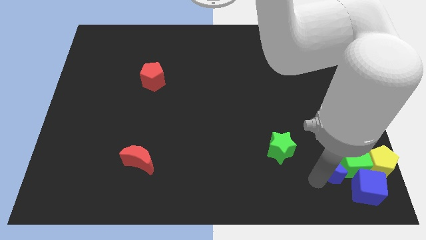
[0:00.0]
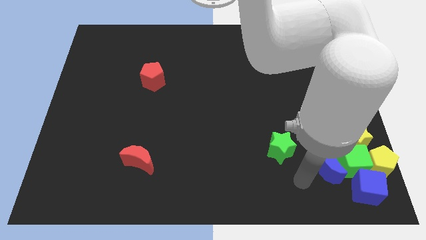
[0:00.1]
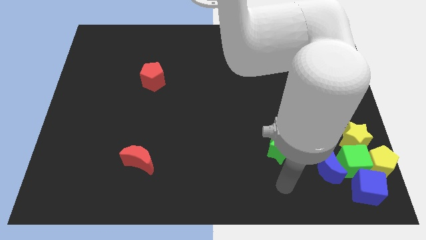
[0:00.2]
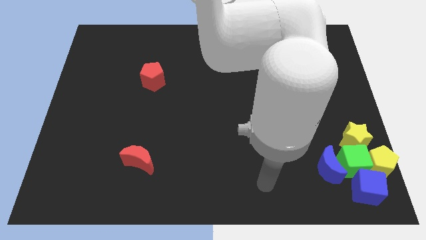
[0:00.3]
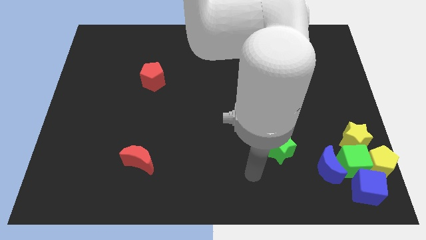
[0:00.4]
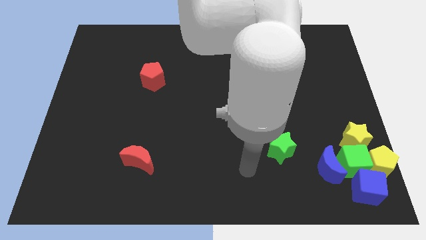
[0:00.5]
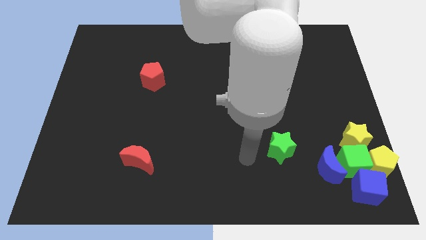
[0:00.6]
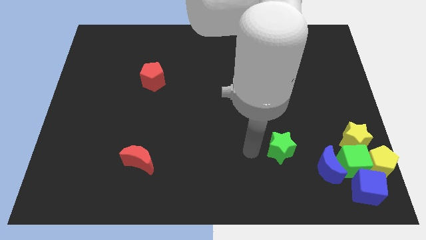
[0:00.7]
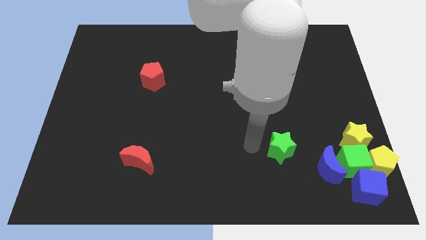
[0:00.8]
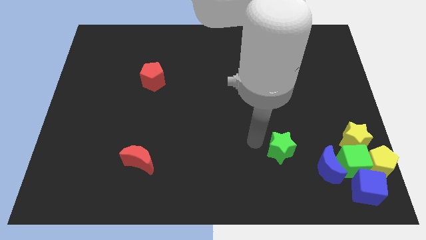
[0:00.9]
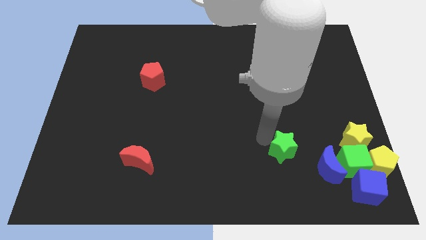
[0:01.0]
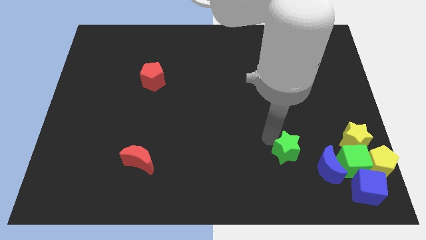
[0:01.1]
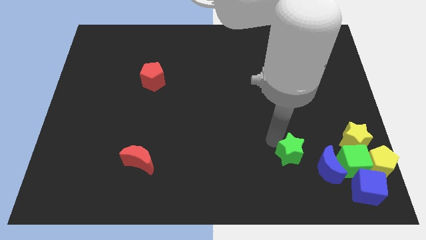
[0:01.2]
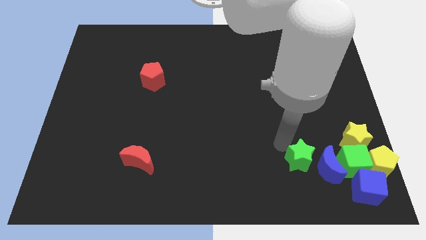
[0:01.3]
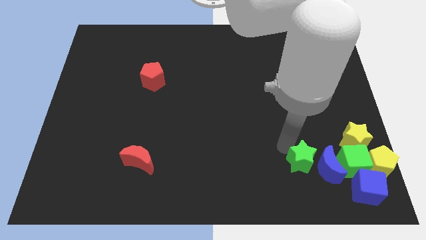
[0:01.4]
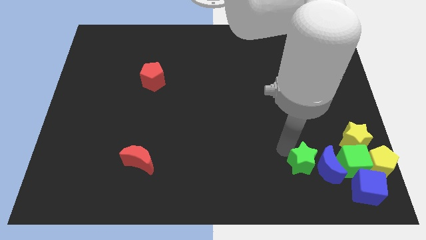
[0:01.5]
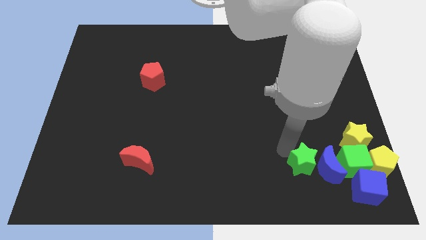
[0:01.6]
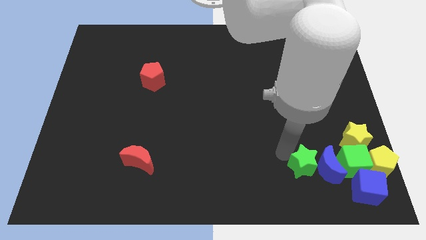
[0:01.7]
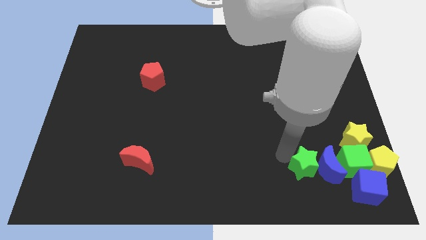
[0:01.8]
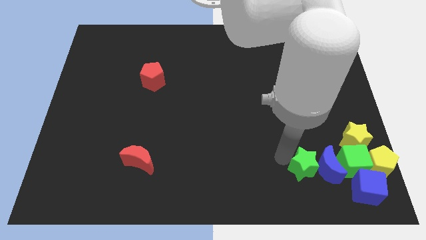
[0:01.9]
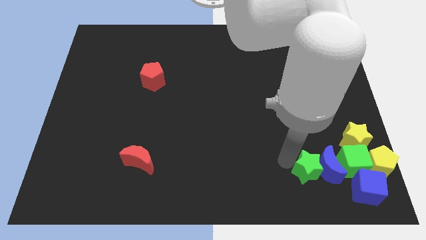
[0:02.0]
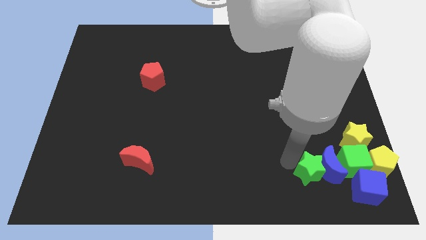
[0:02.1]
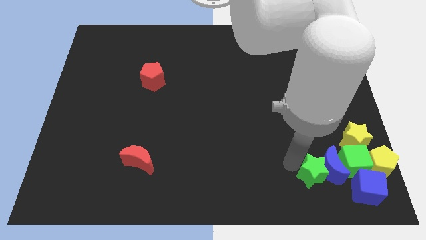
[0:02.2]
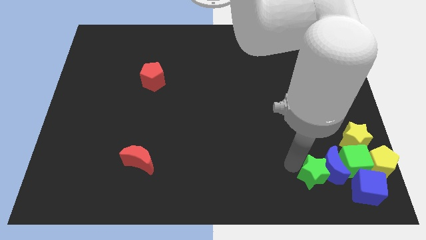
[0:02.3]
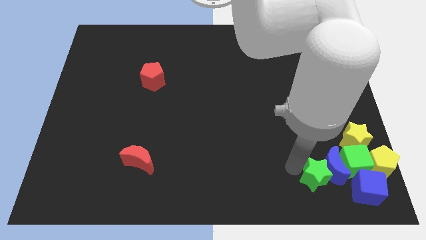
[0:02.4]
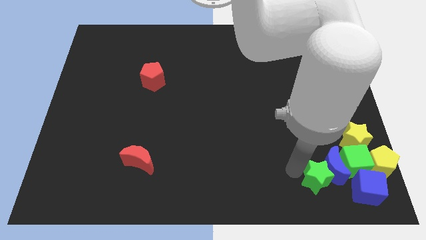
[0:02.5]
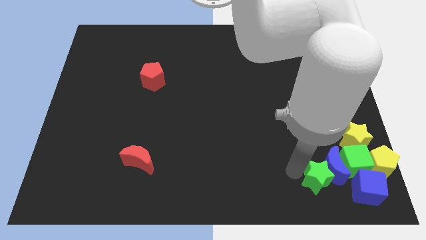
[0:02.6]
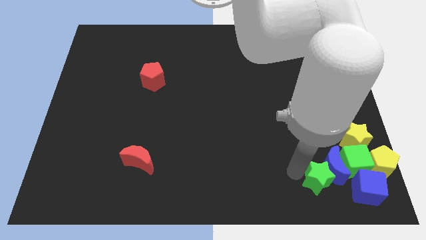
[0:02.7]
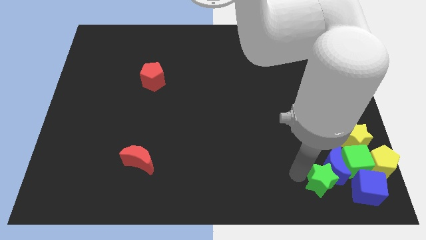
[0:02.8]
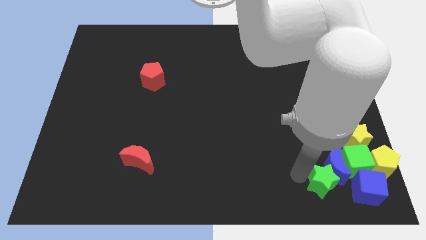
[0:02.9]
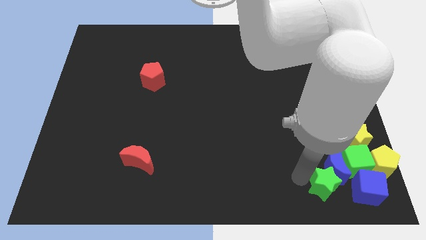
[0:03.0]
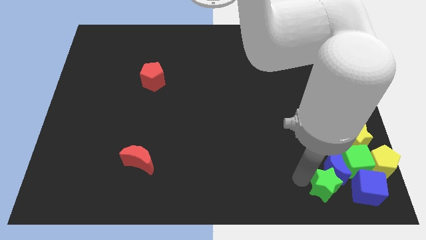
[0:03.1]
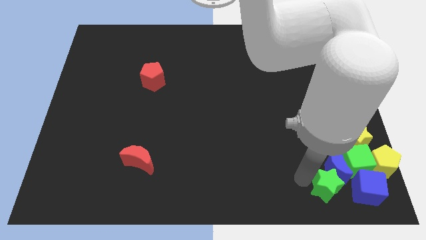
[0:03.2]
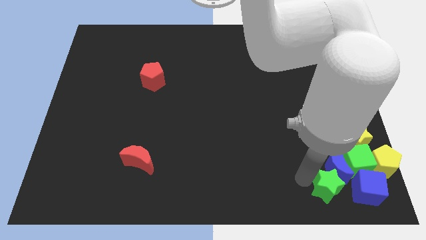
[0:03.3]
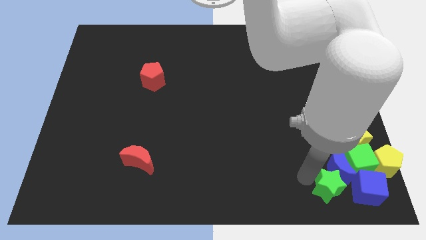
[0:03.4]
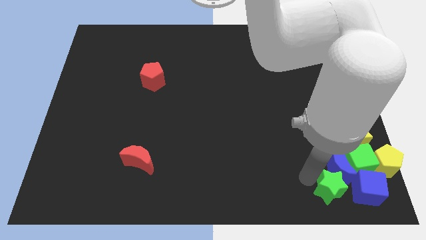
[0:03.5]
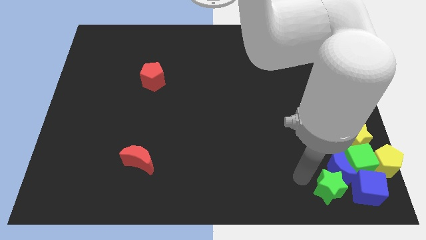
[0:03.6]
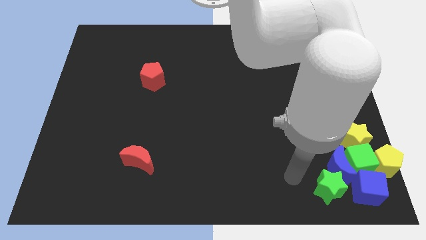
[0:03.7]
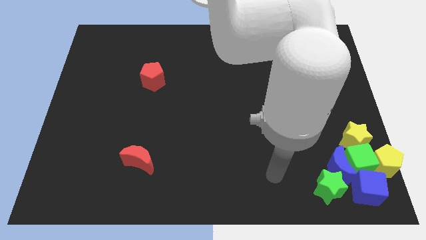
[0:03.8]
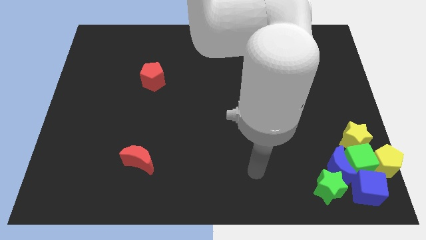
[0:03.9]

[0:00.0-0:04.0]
push the green star into the blue moon

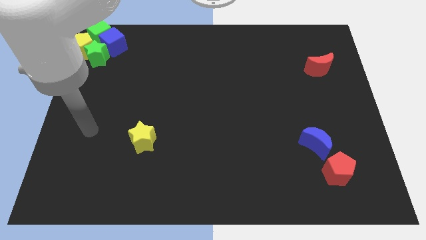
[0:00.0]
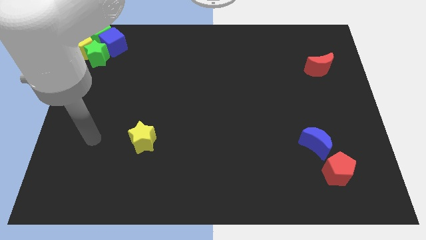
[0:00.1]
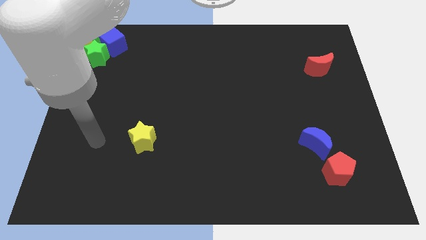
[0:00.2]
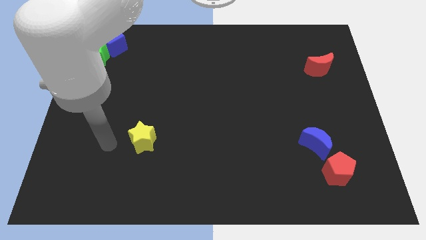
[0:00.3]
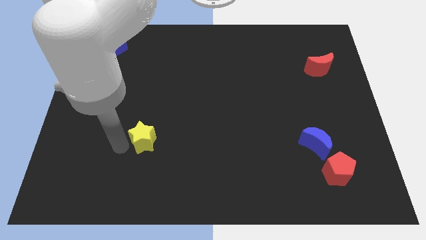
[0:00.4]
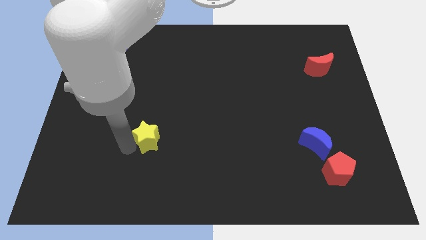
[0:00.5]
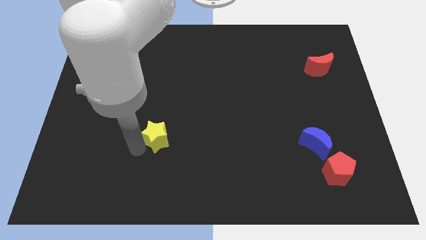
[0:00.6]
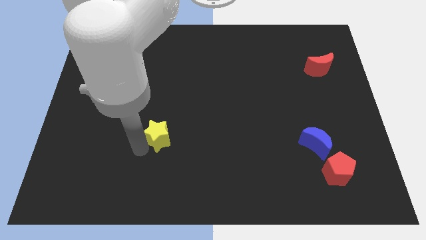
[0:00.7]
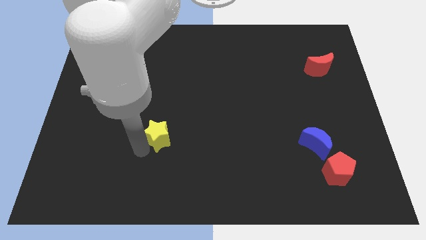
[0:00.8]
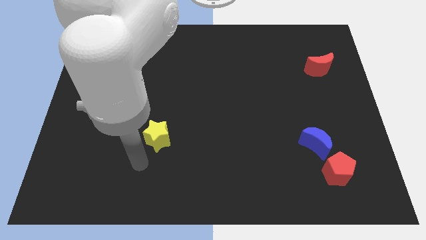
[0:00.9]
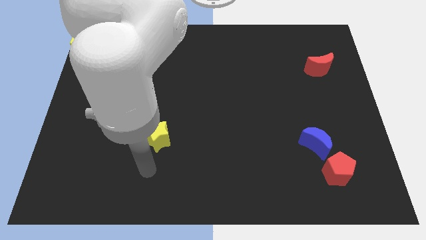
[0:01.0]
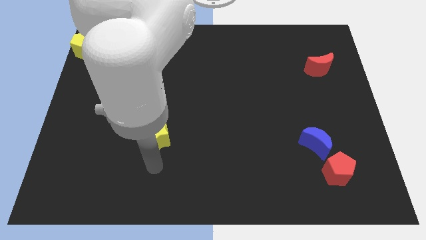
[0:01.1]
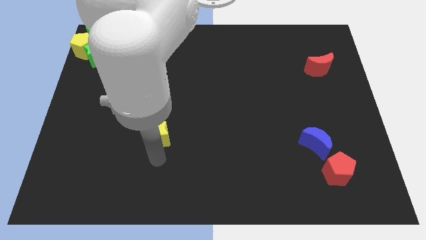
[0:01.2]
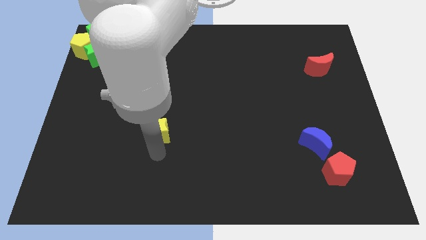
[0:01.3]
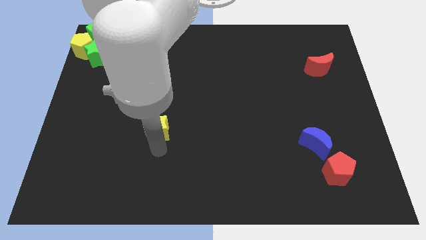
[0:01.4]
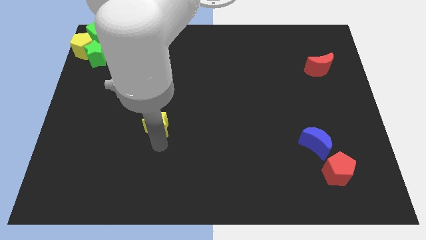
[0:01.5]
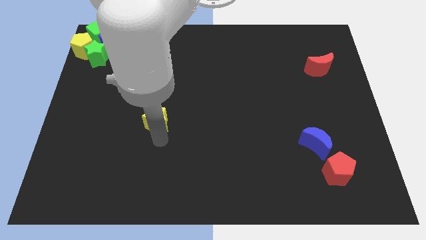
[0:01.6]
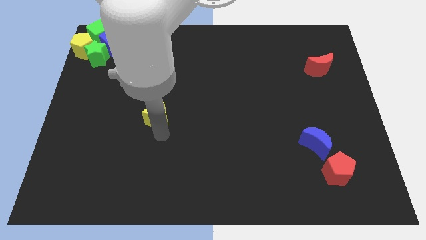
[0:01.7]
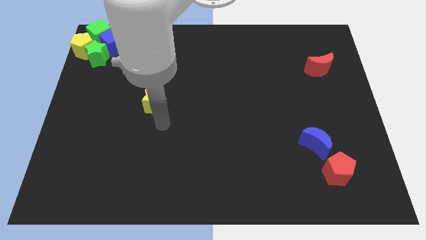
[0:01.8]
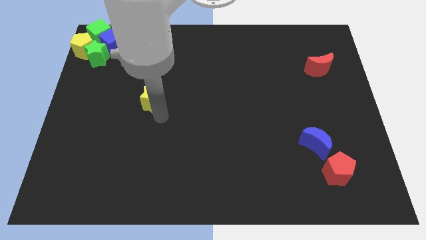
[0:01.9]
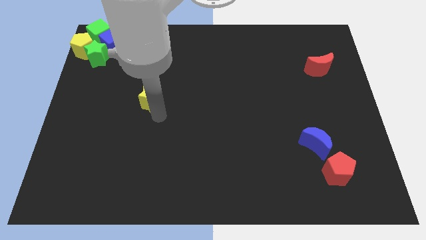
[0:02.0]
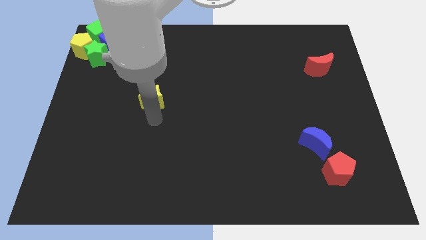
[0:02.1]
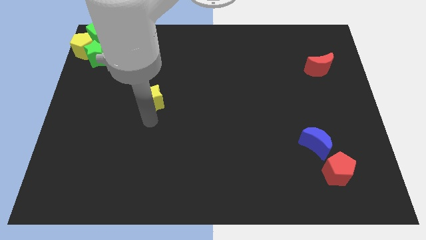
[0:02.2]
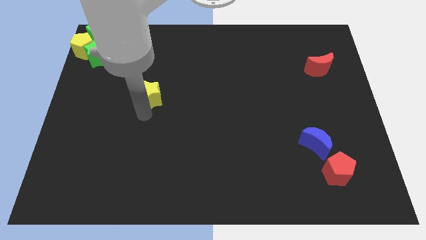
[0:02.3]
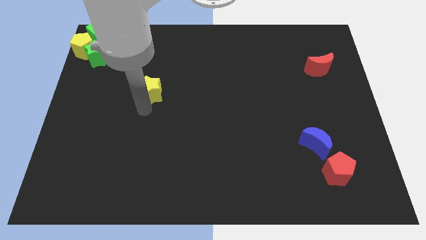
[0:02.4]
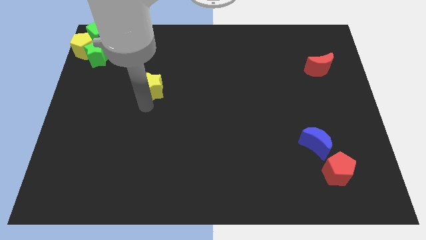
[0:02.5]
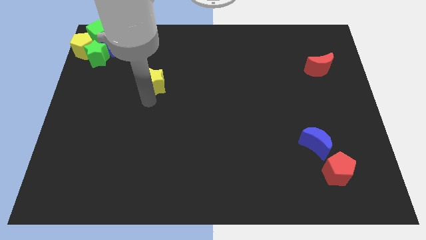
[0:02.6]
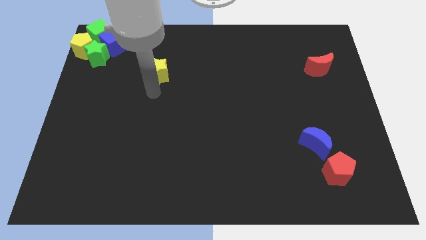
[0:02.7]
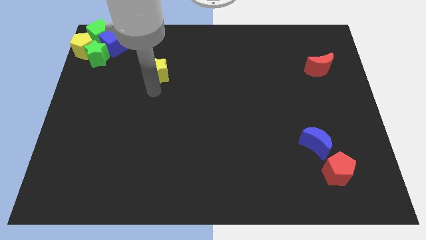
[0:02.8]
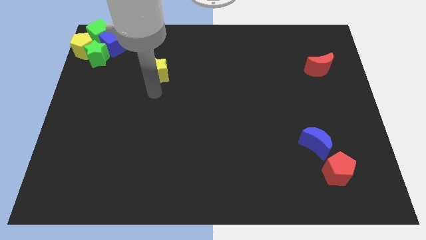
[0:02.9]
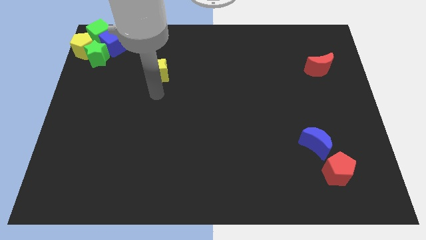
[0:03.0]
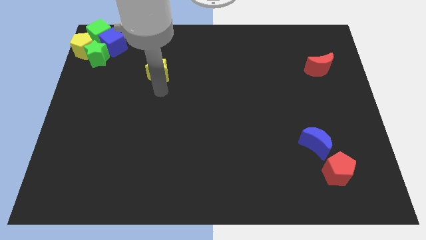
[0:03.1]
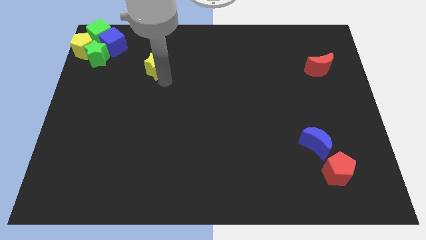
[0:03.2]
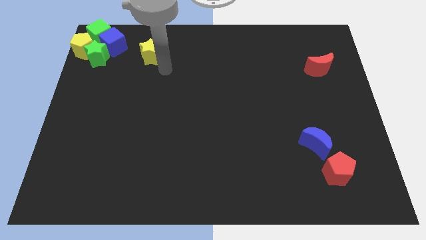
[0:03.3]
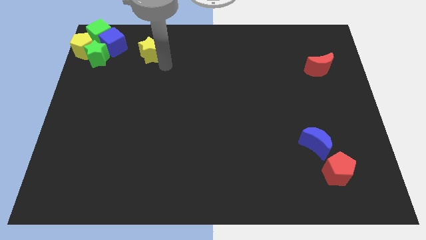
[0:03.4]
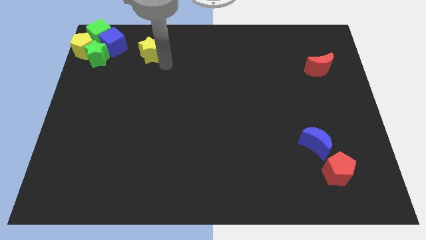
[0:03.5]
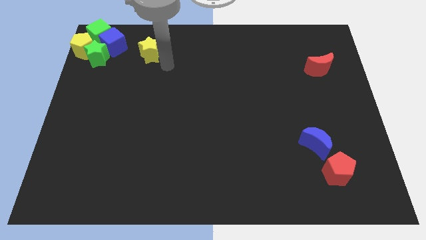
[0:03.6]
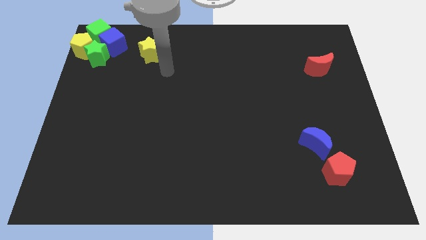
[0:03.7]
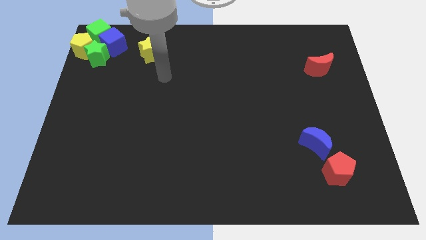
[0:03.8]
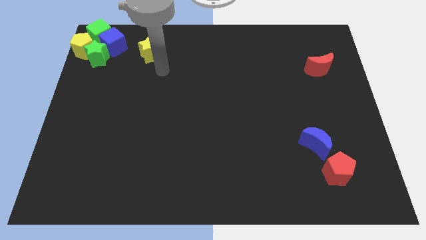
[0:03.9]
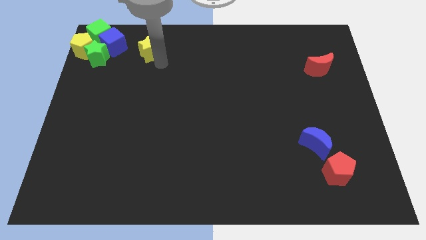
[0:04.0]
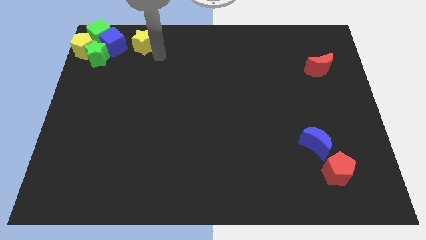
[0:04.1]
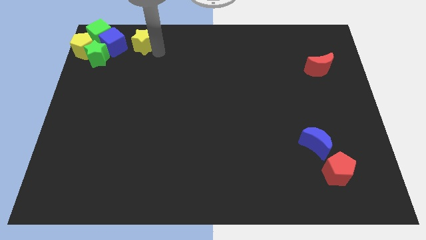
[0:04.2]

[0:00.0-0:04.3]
push the yellow star to the top right side of the blue cube

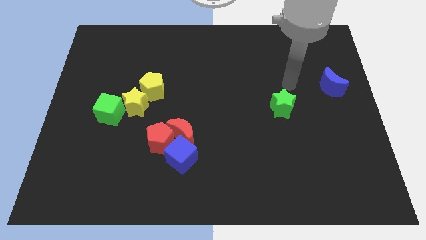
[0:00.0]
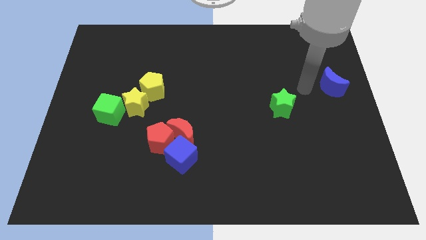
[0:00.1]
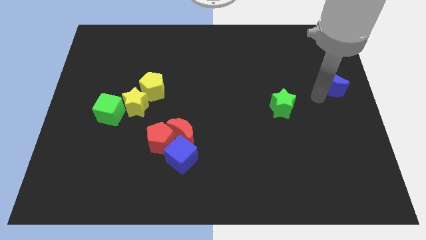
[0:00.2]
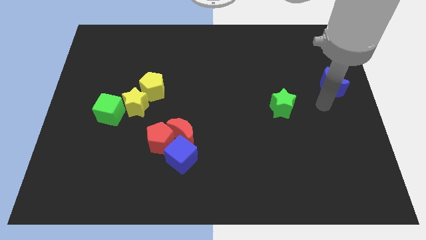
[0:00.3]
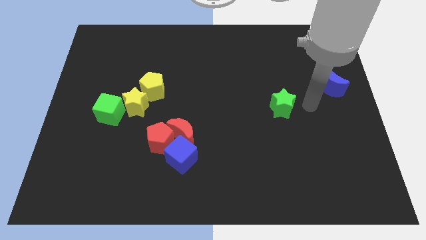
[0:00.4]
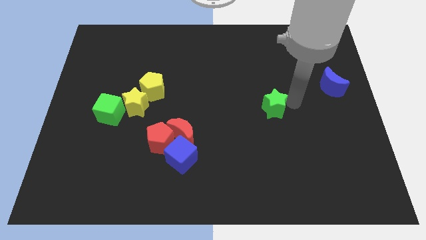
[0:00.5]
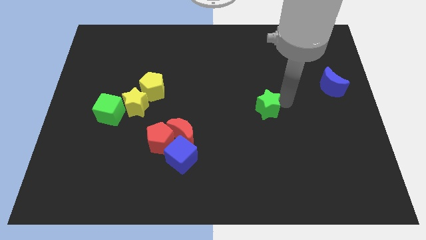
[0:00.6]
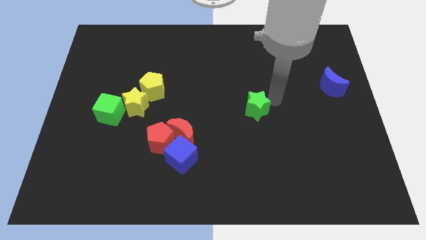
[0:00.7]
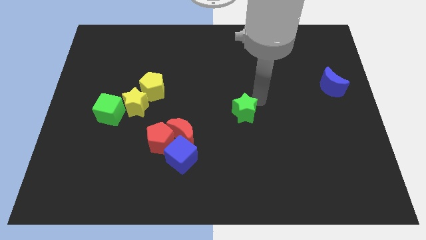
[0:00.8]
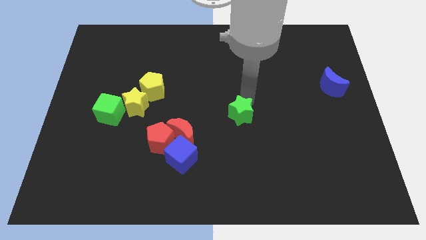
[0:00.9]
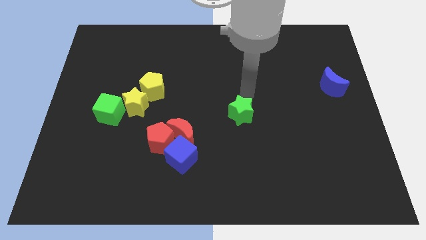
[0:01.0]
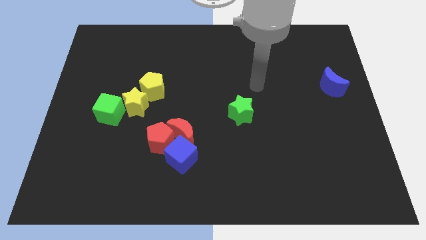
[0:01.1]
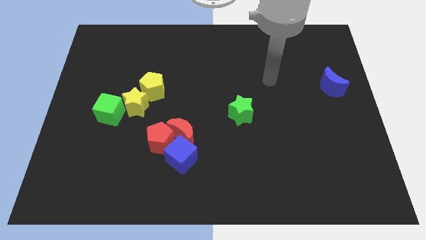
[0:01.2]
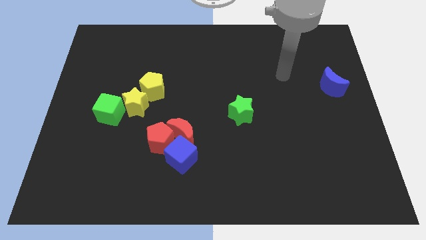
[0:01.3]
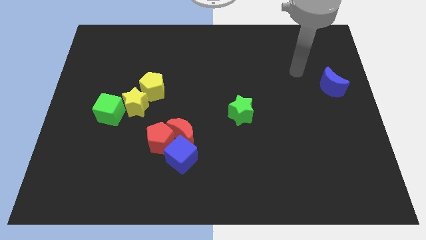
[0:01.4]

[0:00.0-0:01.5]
slightly move the green star to the center of the board
